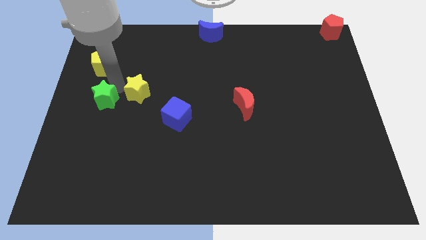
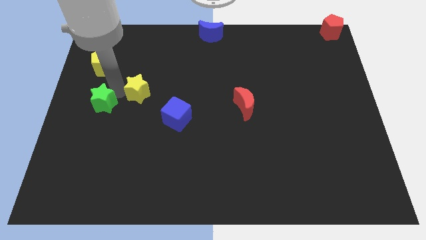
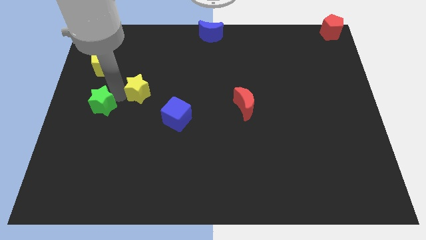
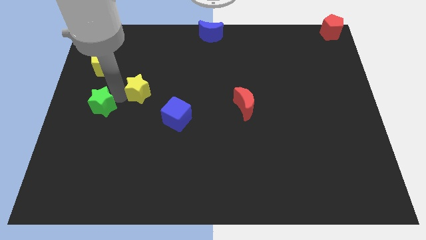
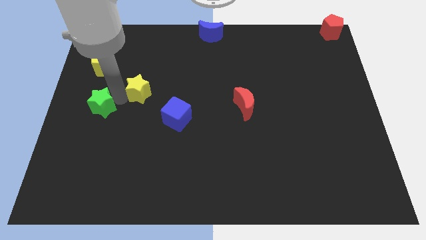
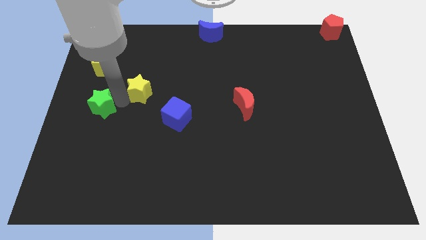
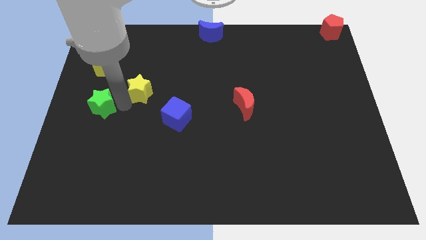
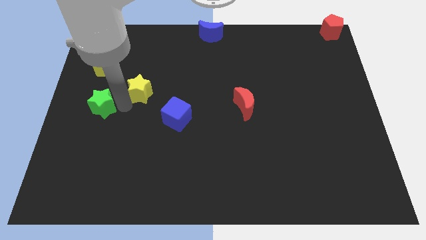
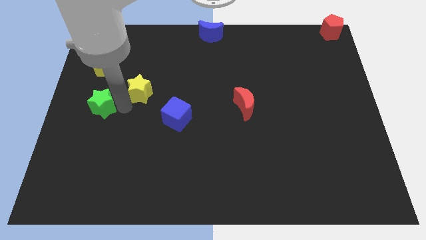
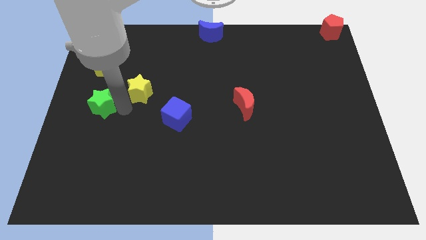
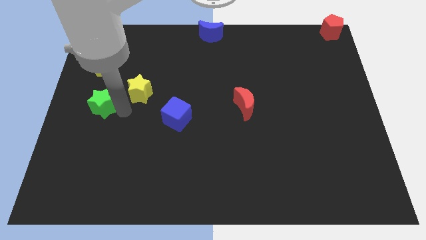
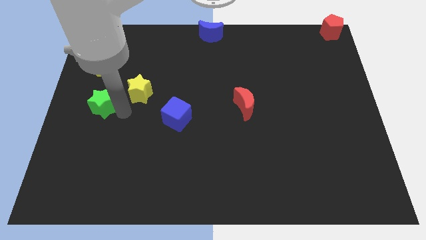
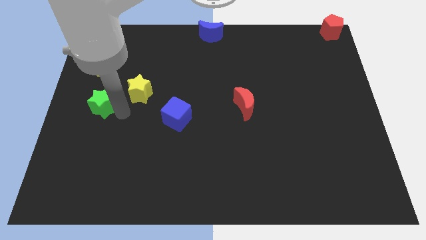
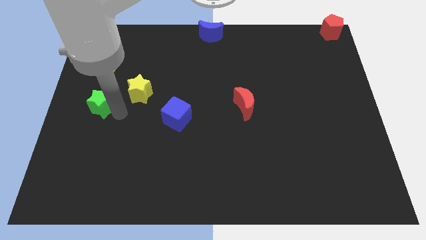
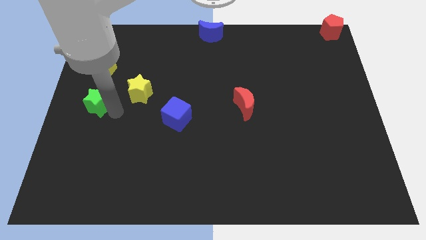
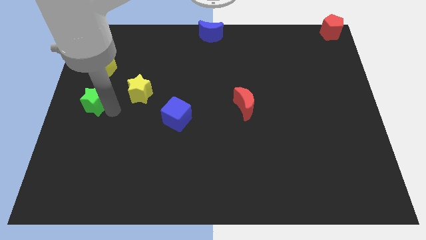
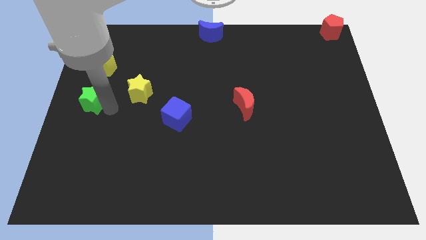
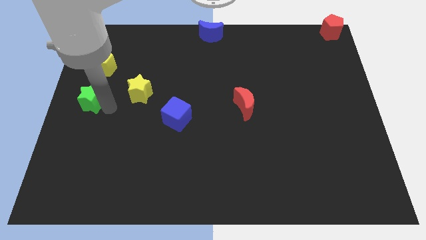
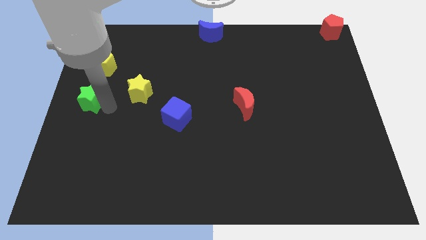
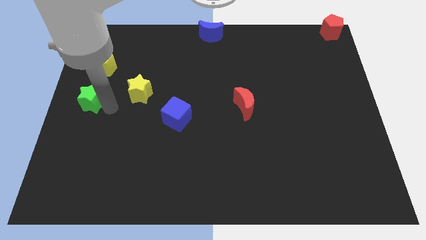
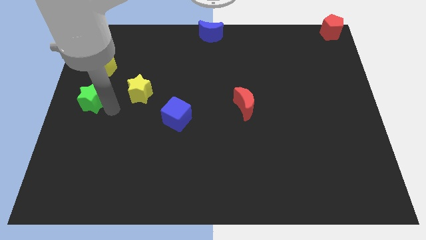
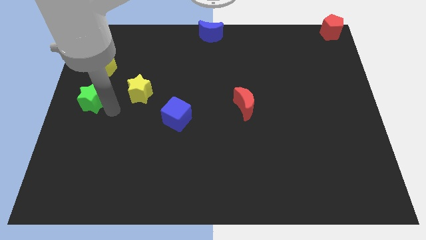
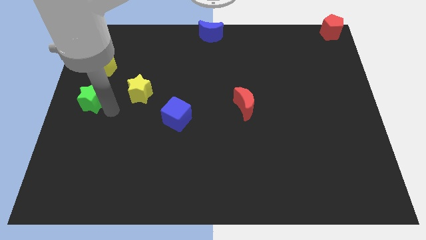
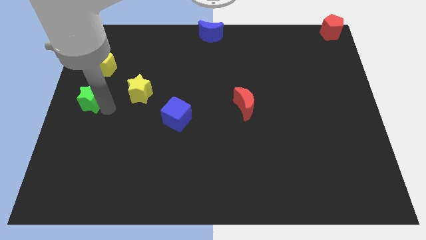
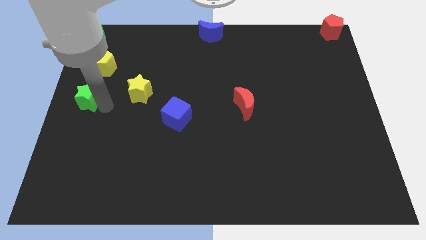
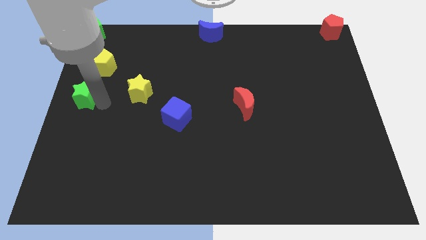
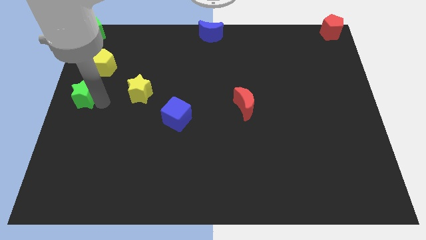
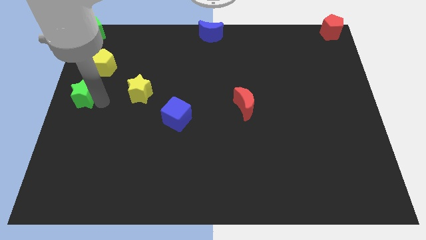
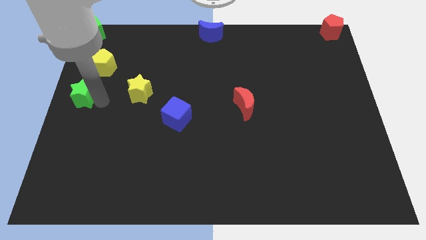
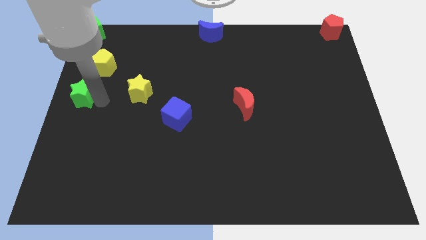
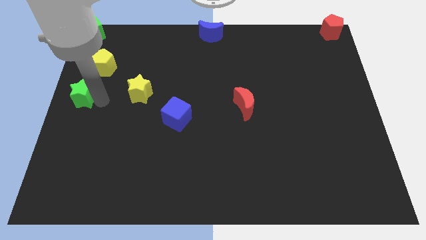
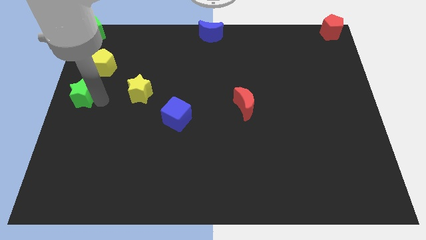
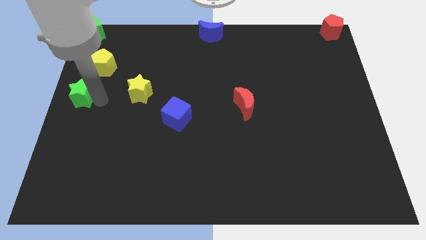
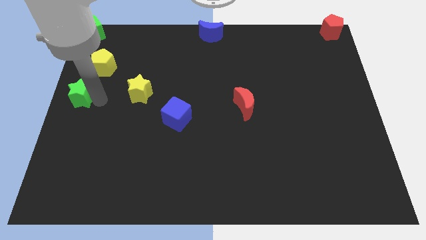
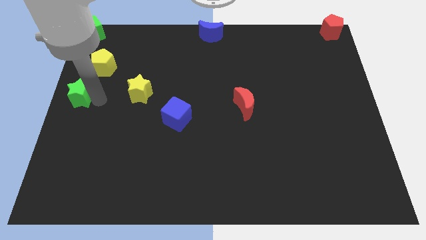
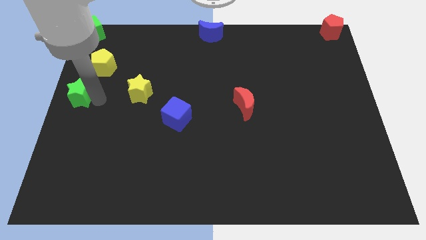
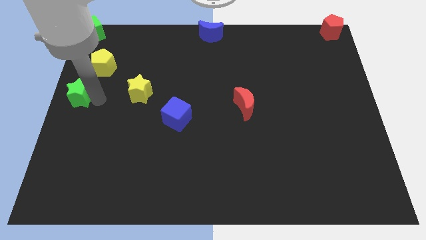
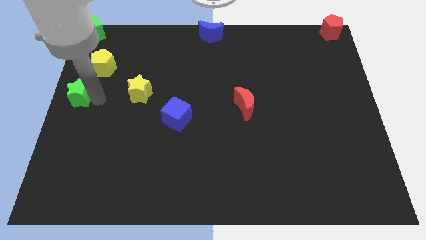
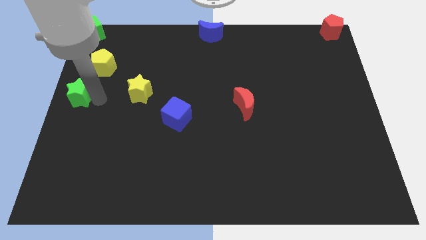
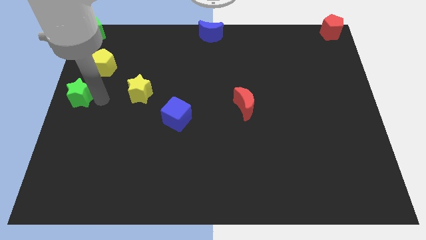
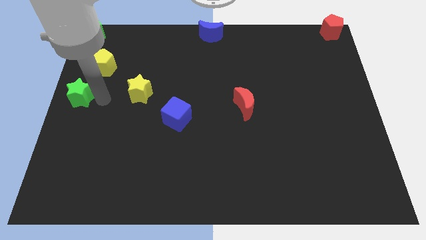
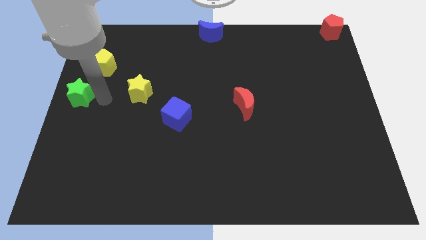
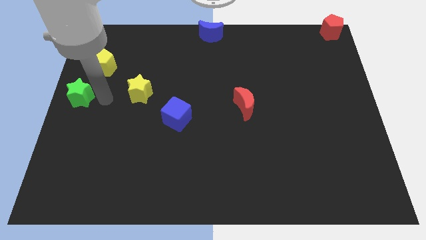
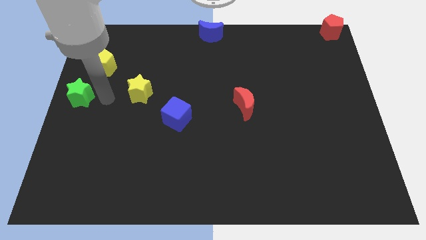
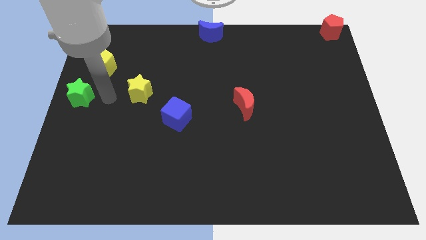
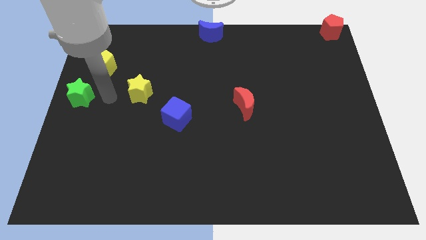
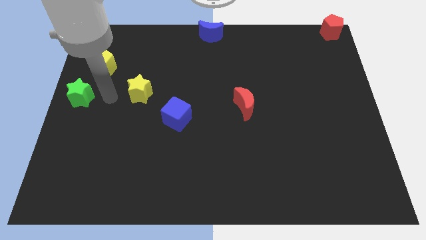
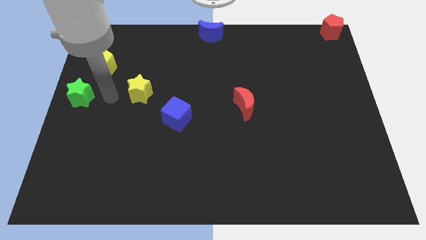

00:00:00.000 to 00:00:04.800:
move the green star to the left center of the board

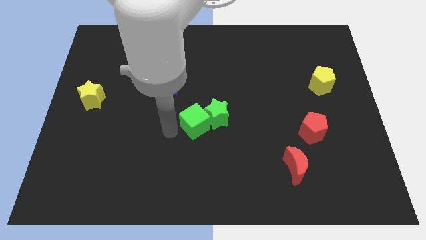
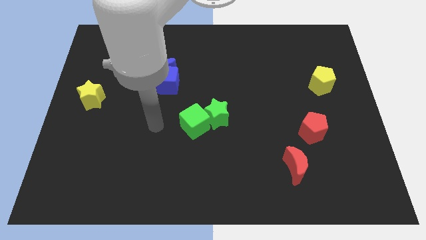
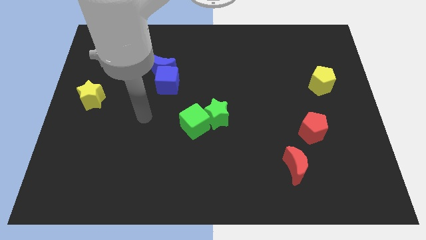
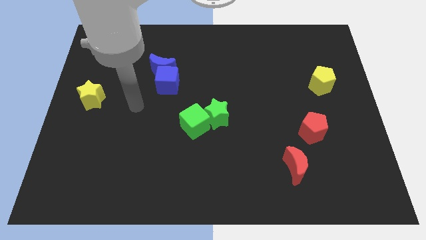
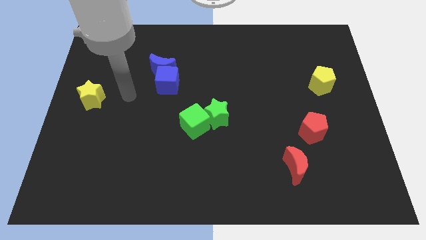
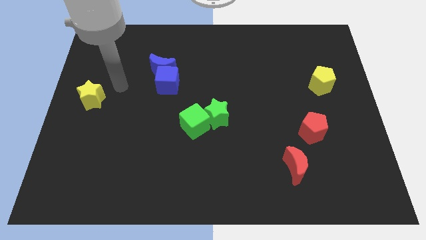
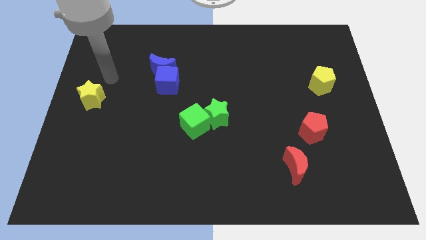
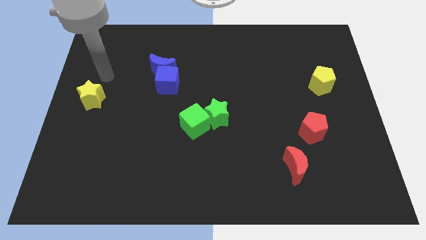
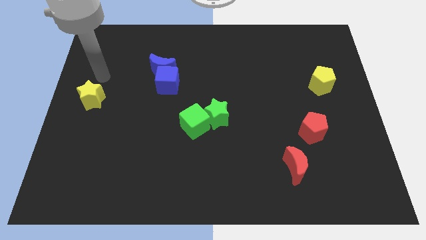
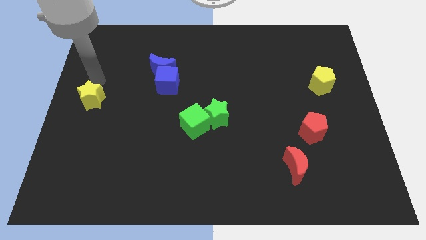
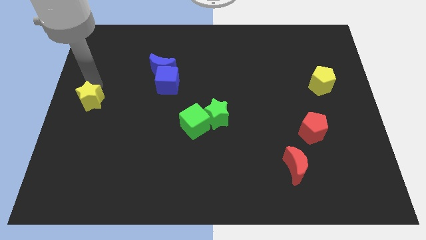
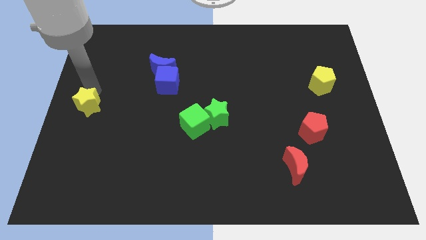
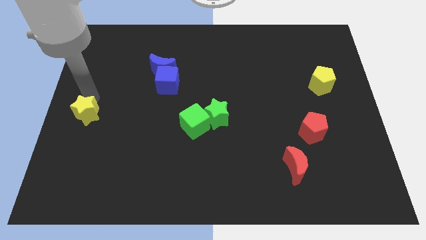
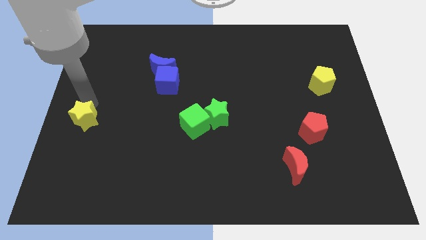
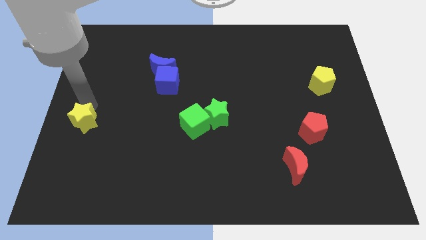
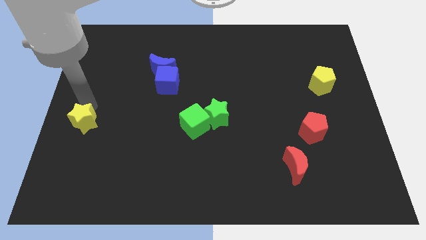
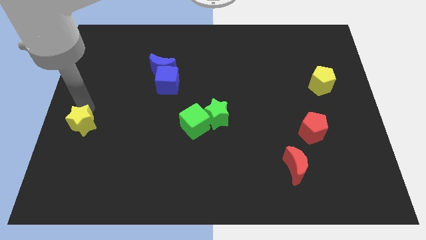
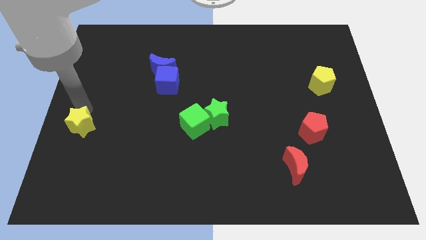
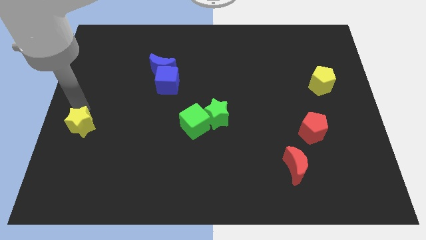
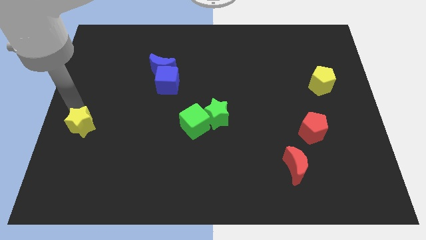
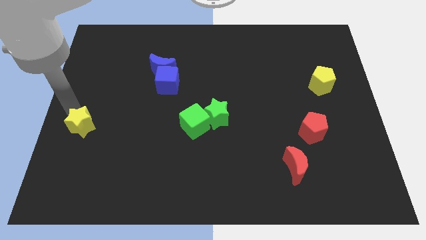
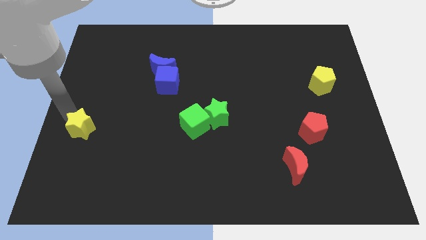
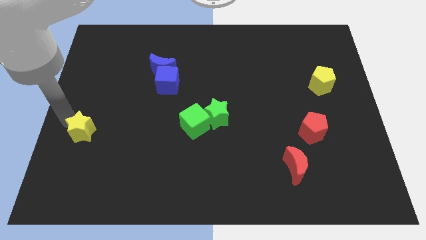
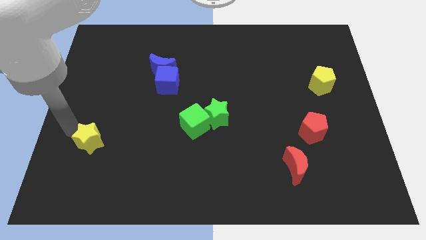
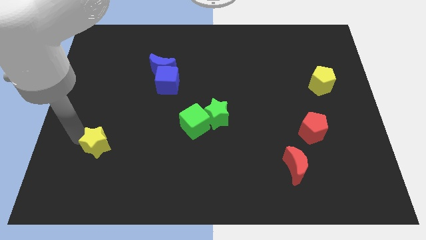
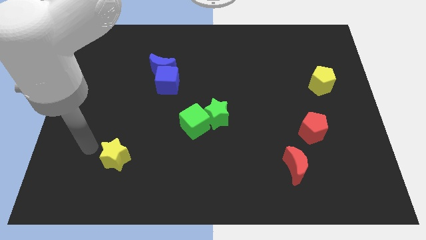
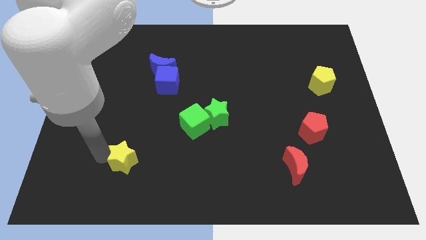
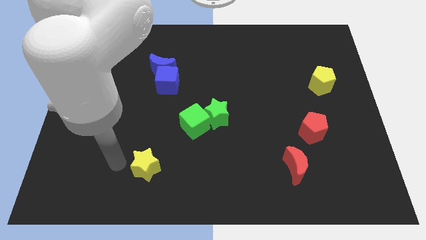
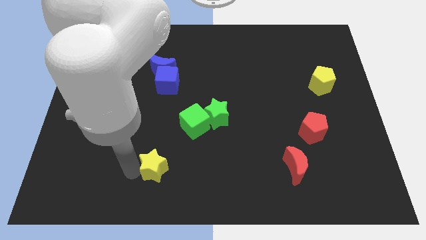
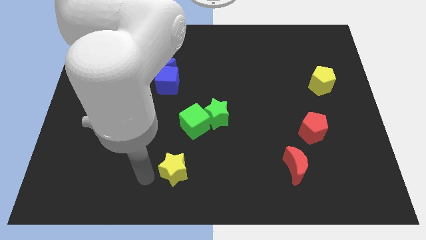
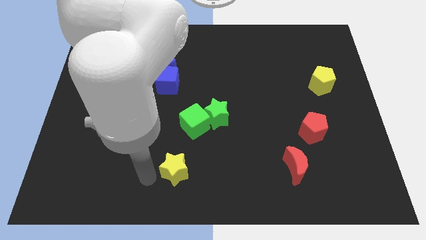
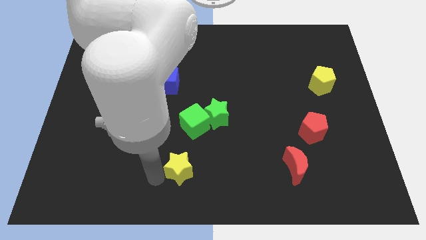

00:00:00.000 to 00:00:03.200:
slide the yellow star diagonally bottom left to the green blocks

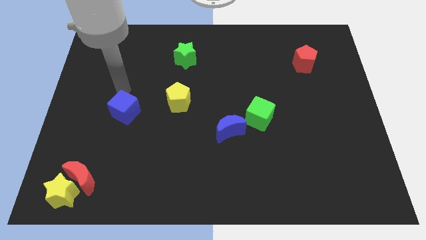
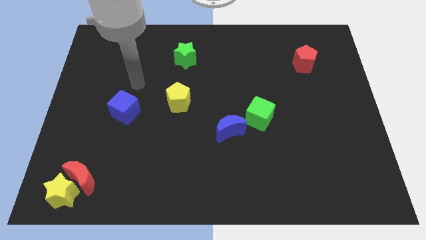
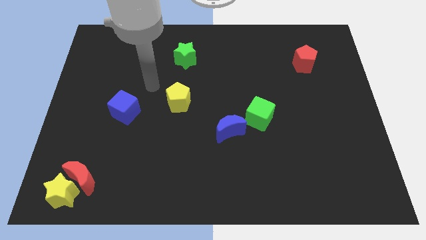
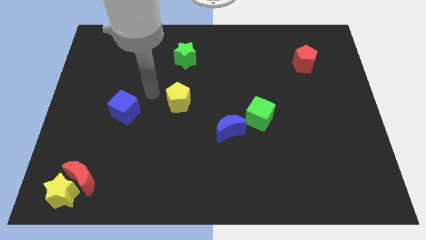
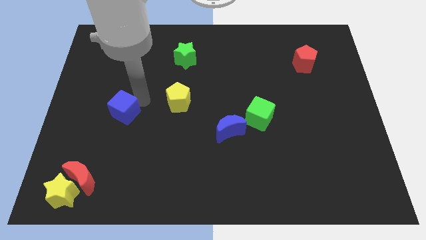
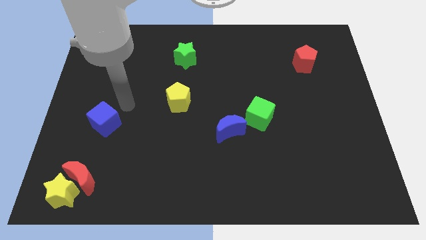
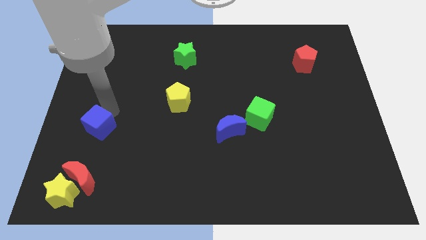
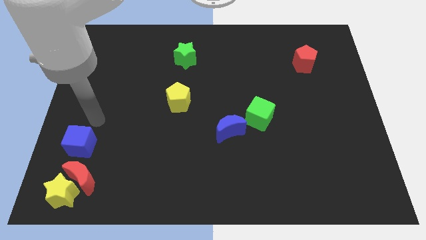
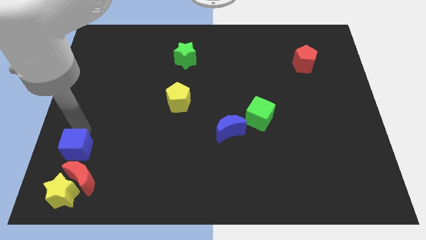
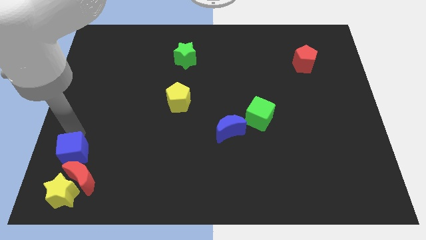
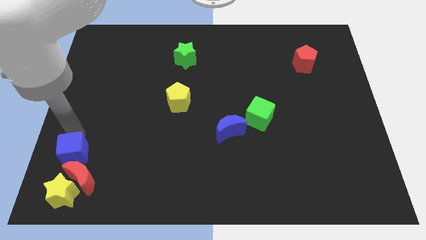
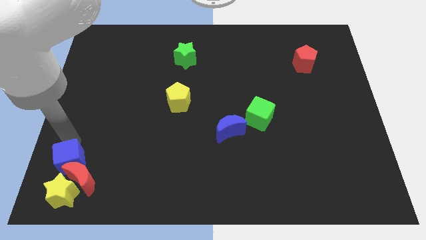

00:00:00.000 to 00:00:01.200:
push the blue cube into red crescent
